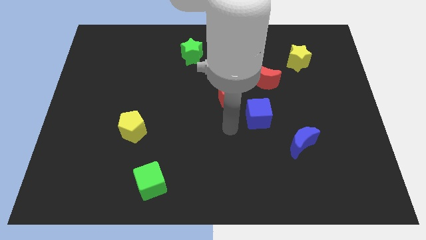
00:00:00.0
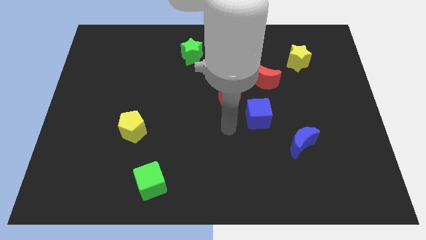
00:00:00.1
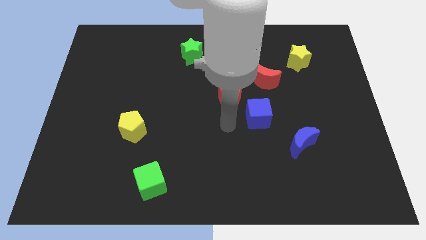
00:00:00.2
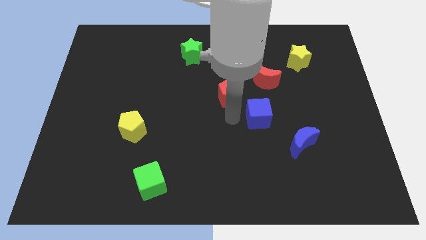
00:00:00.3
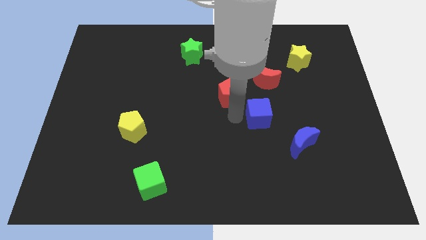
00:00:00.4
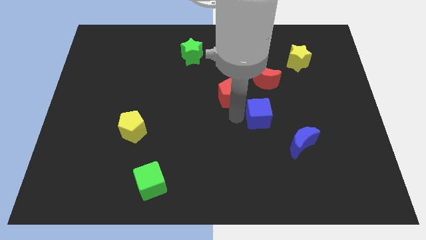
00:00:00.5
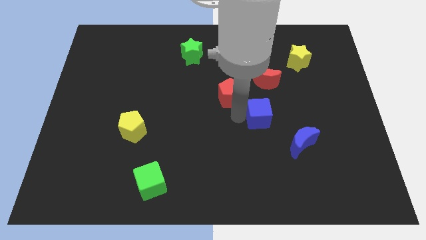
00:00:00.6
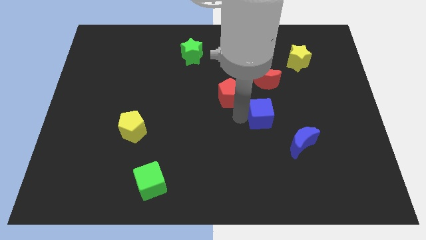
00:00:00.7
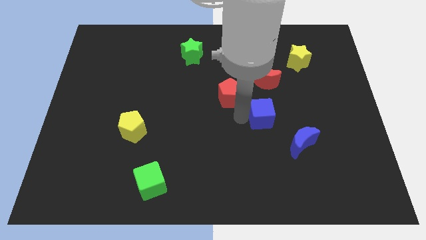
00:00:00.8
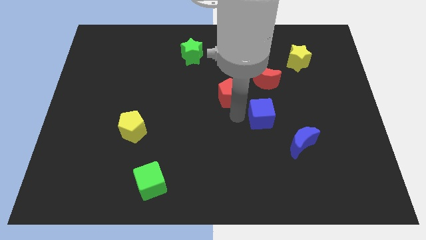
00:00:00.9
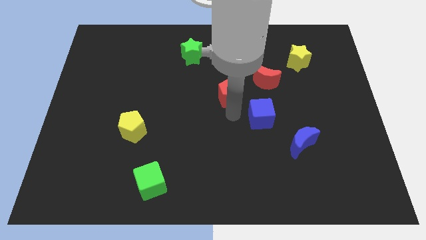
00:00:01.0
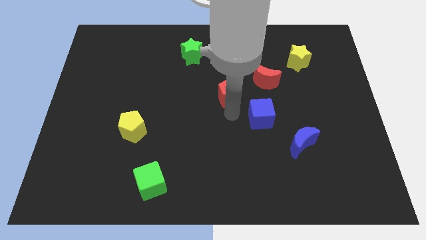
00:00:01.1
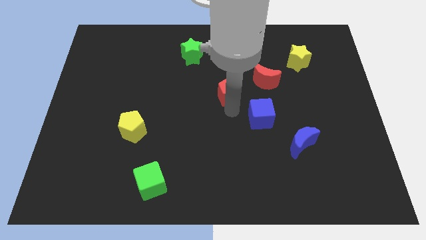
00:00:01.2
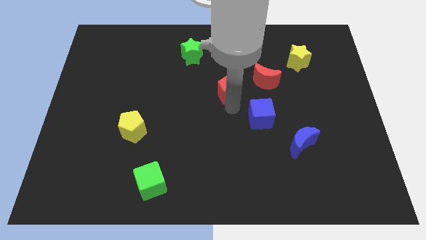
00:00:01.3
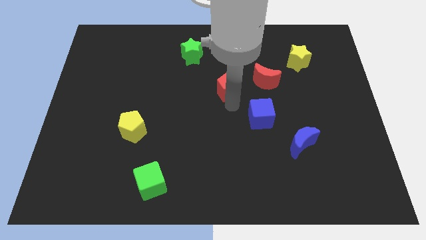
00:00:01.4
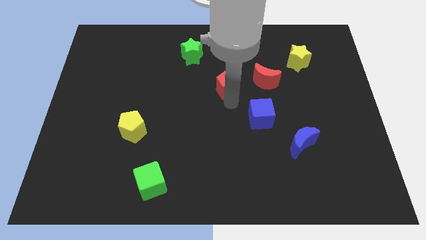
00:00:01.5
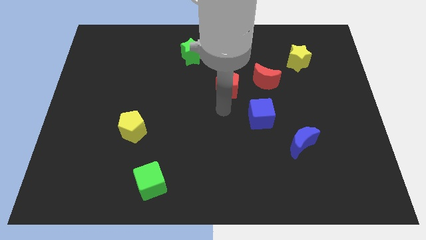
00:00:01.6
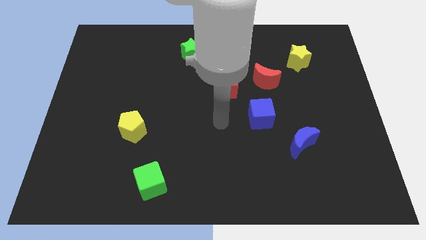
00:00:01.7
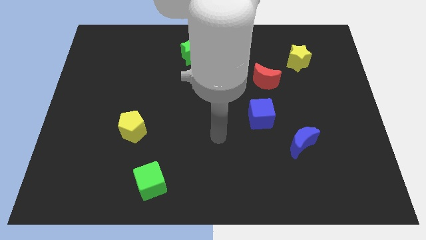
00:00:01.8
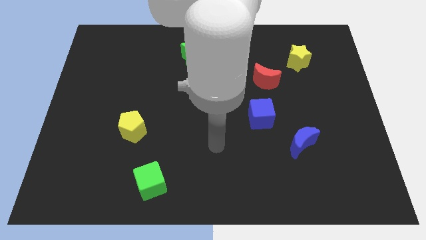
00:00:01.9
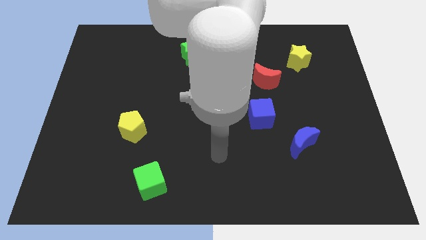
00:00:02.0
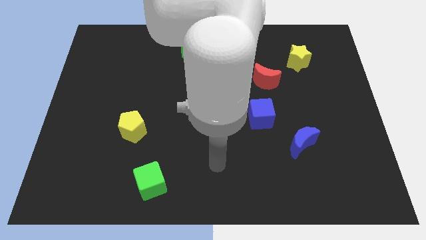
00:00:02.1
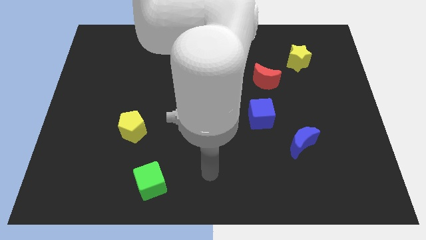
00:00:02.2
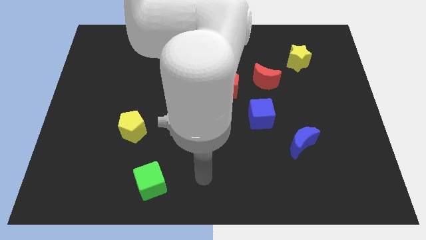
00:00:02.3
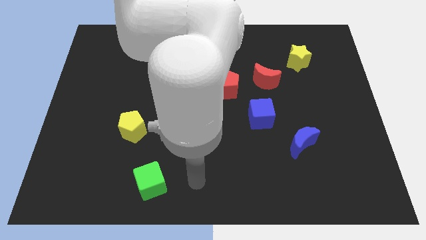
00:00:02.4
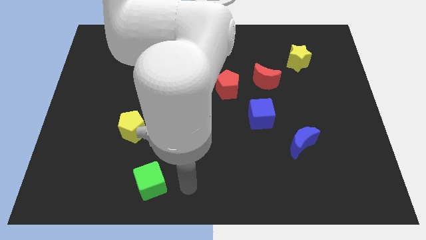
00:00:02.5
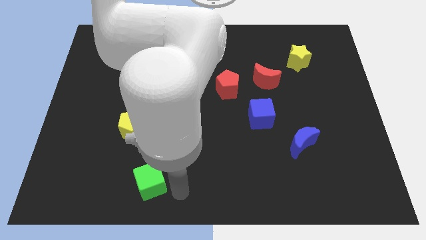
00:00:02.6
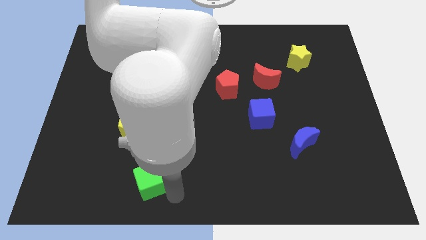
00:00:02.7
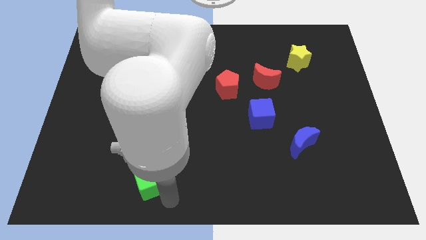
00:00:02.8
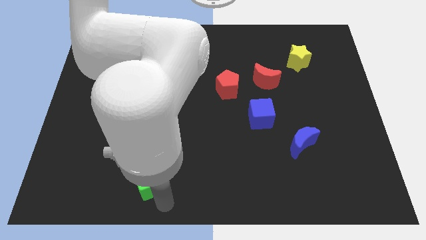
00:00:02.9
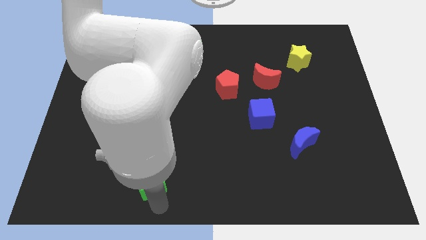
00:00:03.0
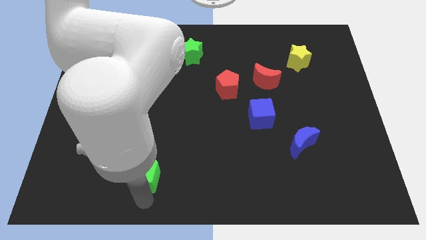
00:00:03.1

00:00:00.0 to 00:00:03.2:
move your arm below the green cube

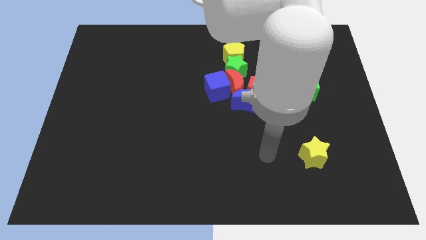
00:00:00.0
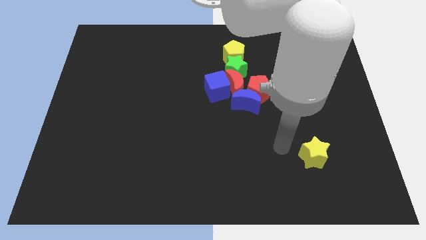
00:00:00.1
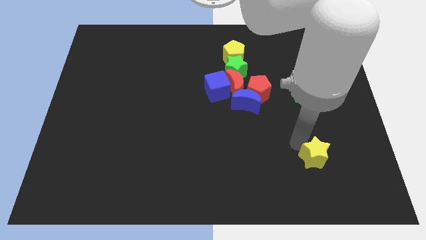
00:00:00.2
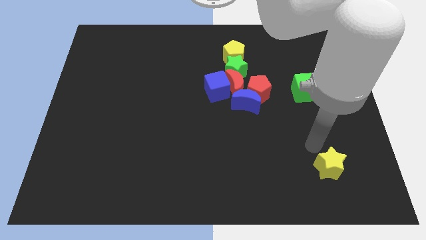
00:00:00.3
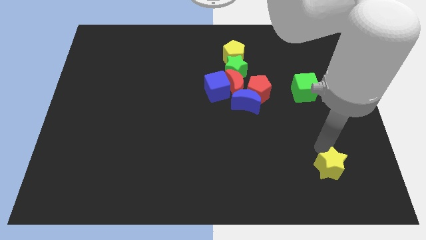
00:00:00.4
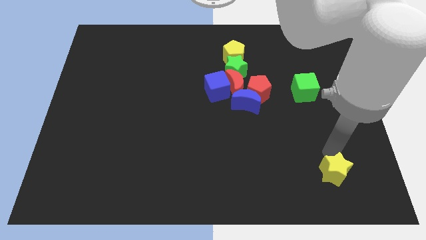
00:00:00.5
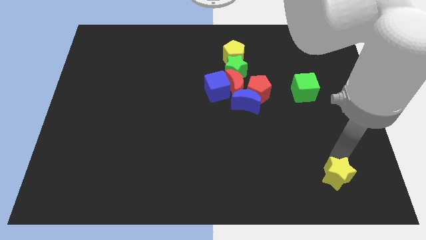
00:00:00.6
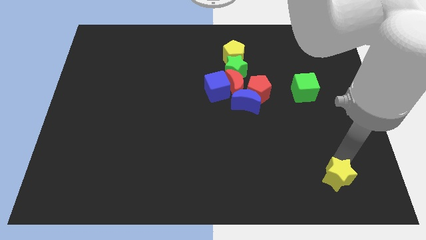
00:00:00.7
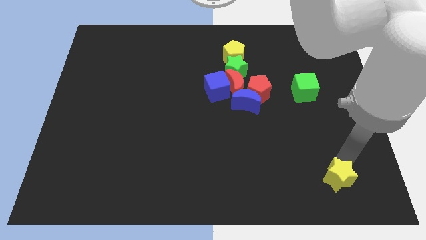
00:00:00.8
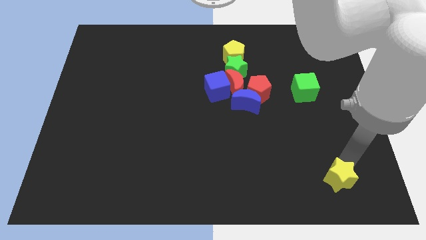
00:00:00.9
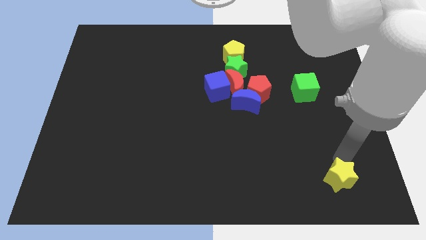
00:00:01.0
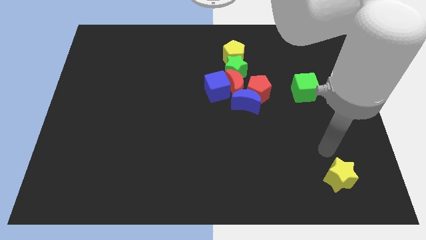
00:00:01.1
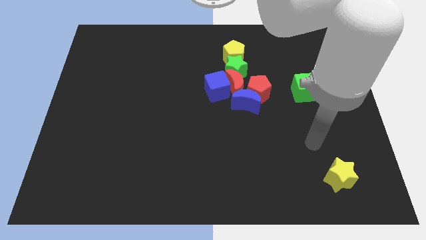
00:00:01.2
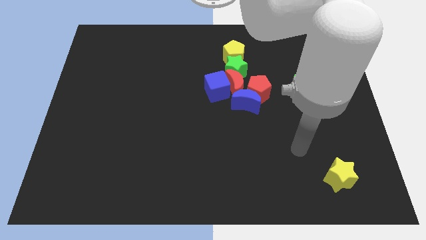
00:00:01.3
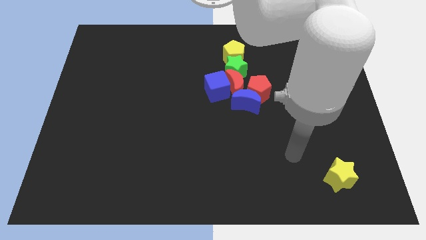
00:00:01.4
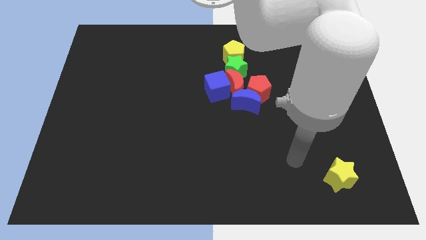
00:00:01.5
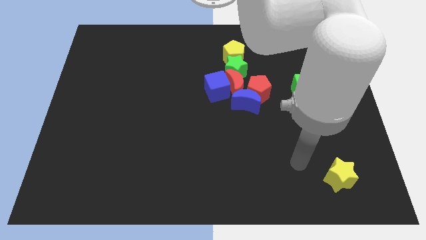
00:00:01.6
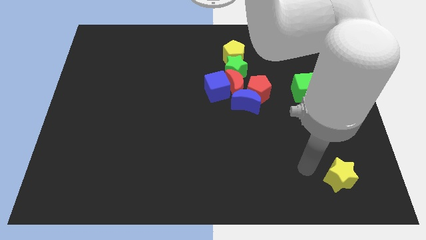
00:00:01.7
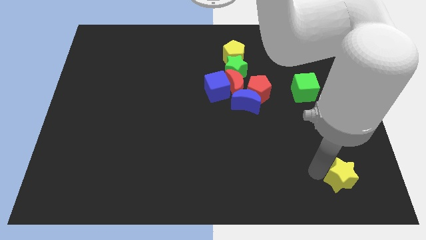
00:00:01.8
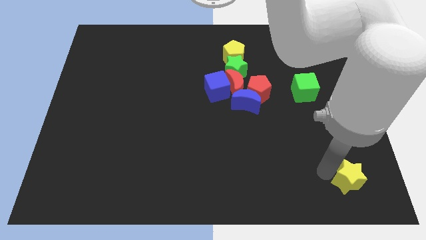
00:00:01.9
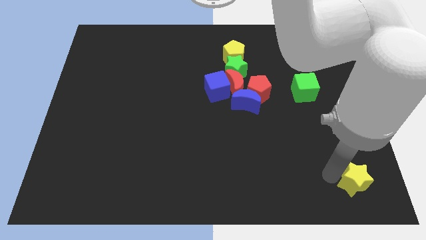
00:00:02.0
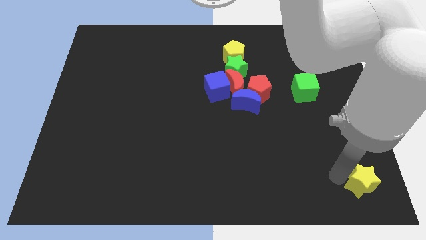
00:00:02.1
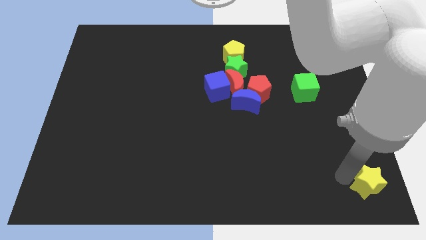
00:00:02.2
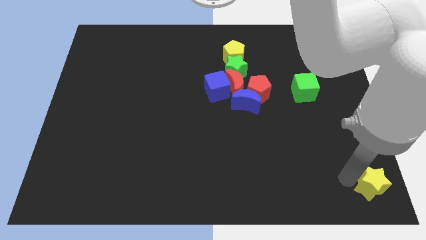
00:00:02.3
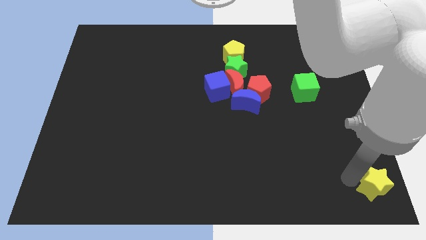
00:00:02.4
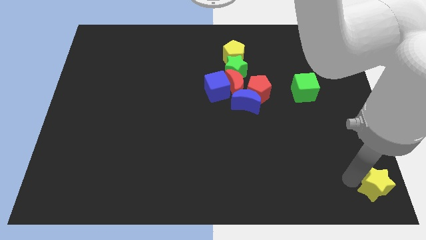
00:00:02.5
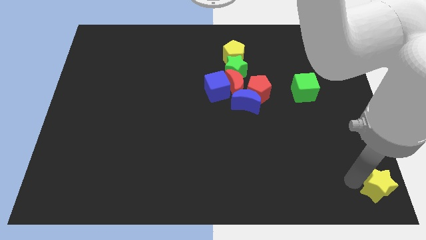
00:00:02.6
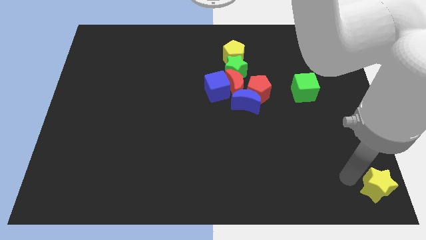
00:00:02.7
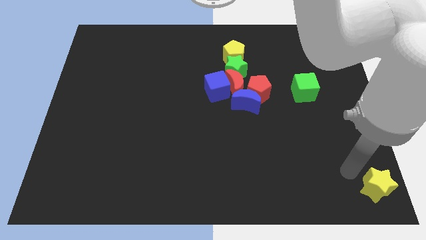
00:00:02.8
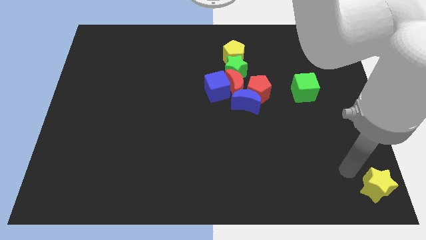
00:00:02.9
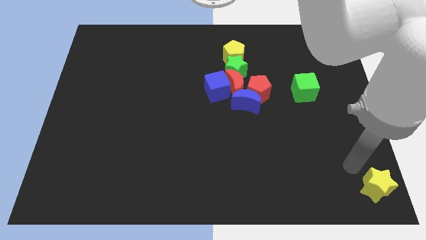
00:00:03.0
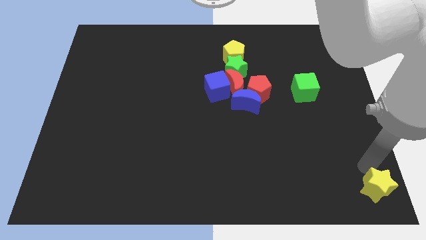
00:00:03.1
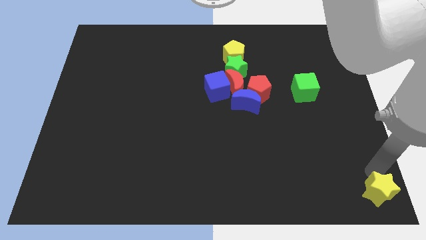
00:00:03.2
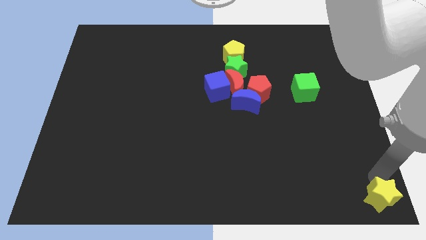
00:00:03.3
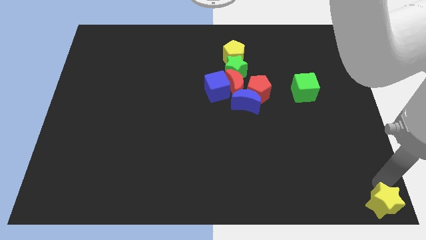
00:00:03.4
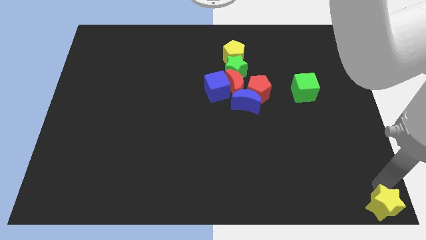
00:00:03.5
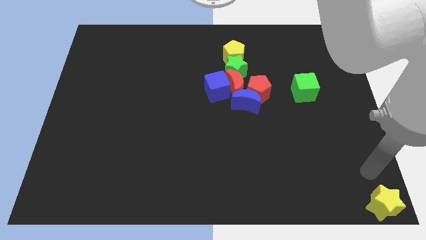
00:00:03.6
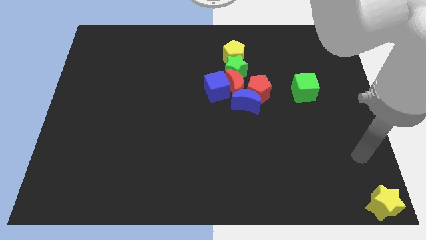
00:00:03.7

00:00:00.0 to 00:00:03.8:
push the yellow star to the bottom right corner of the board

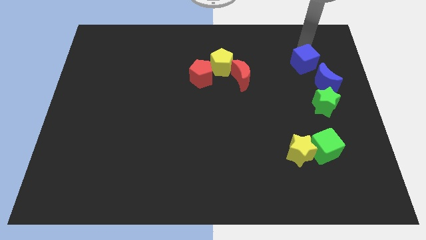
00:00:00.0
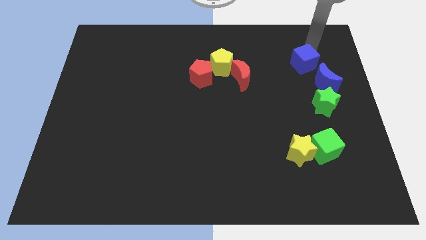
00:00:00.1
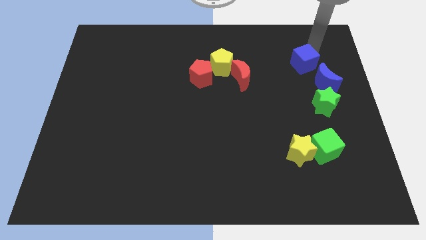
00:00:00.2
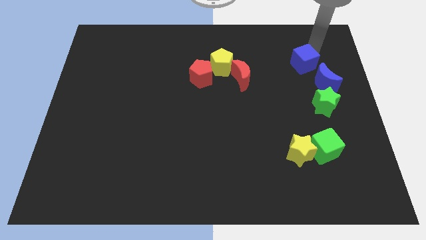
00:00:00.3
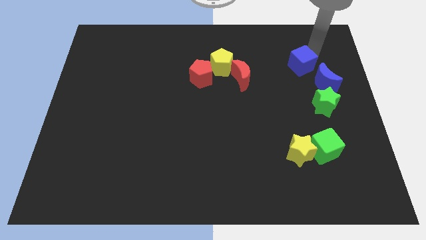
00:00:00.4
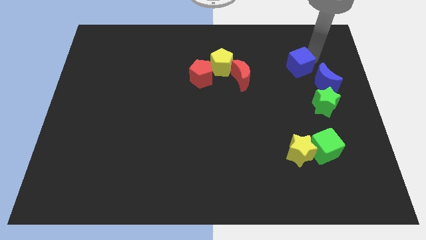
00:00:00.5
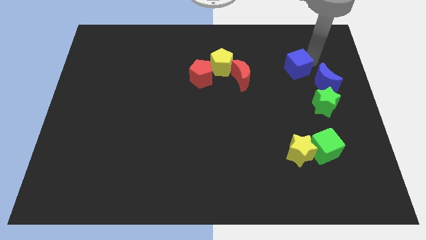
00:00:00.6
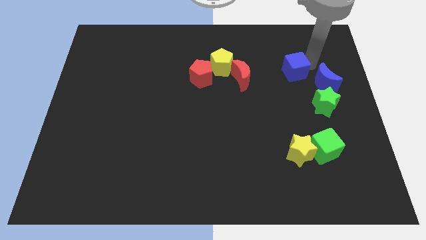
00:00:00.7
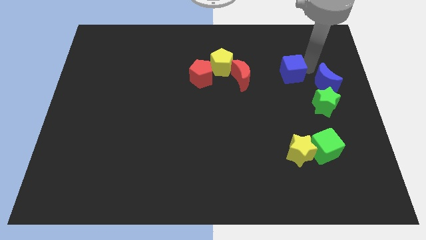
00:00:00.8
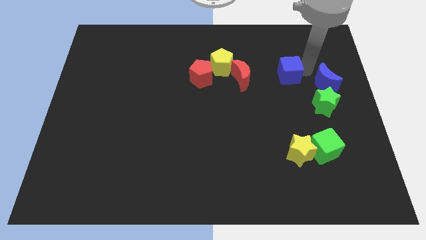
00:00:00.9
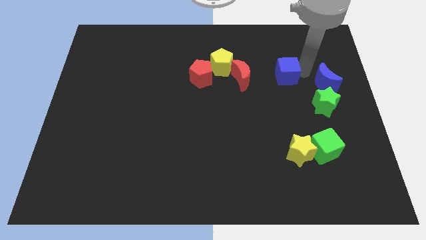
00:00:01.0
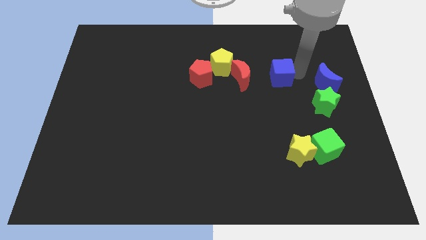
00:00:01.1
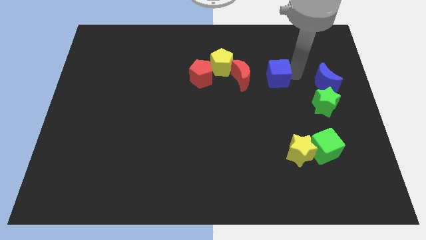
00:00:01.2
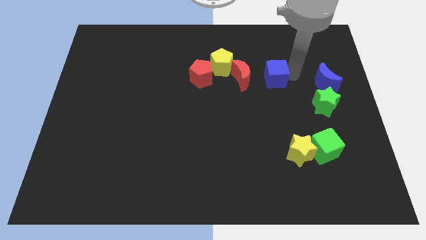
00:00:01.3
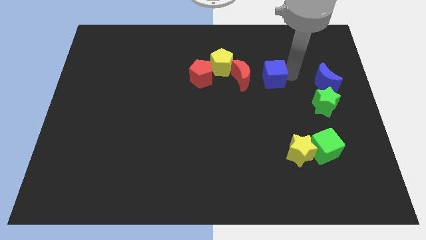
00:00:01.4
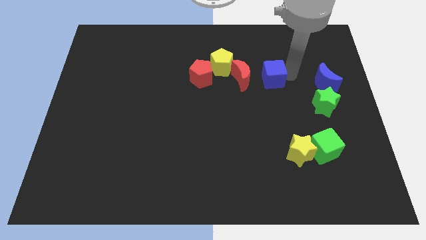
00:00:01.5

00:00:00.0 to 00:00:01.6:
put the blue cube right to red moon

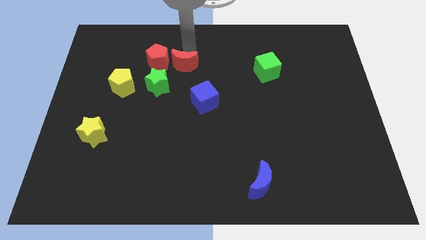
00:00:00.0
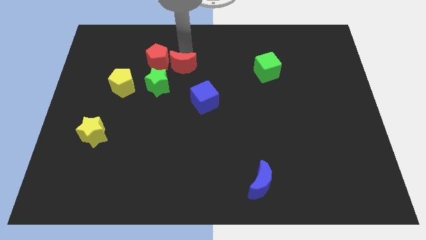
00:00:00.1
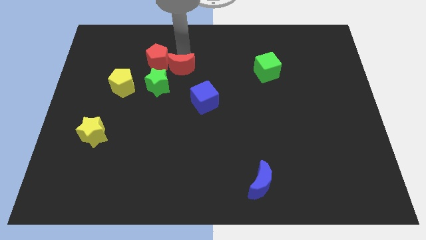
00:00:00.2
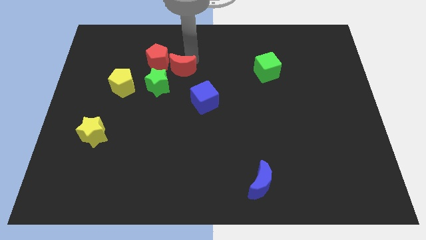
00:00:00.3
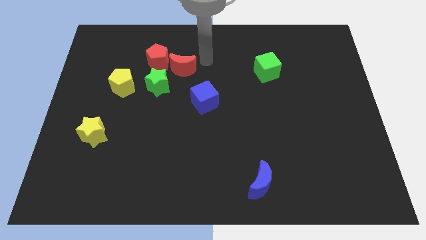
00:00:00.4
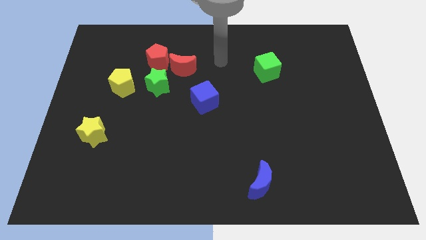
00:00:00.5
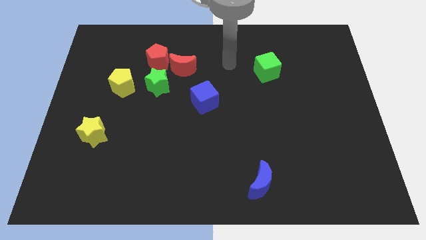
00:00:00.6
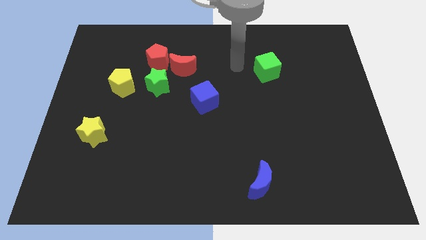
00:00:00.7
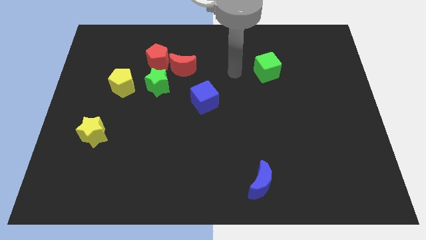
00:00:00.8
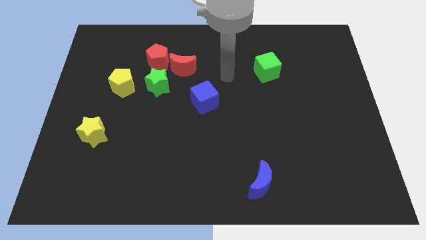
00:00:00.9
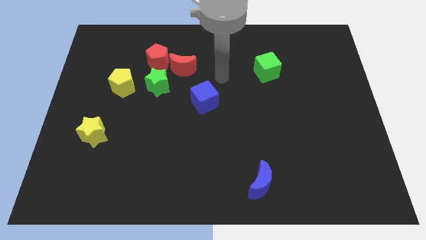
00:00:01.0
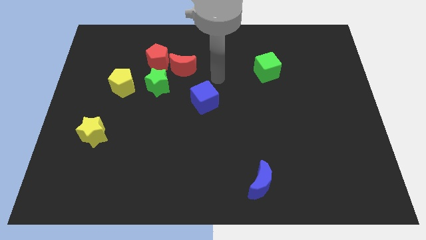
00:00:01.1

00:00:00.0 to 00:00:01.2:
move your arm away from red crescent
